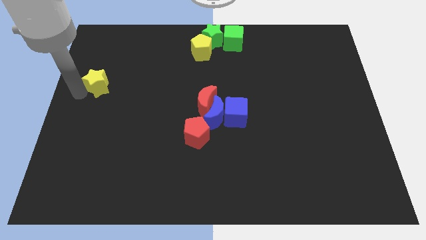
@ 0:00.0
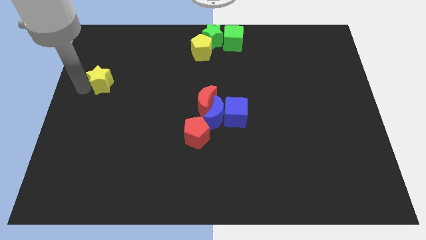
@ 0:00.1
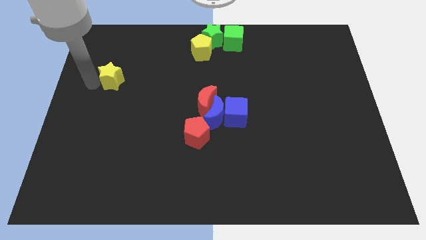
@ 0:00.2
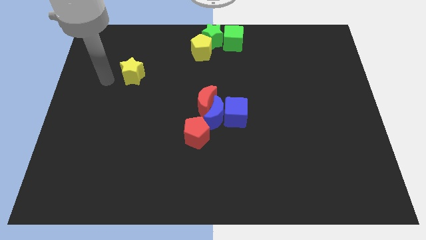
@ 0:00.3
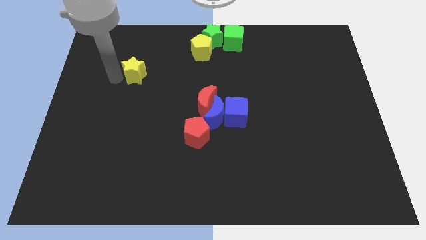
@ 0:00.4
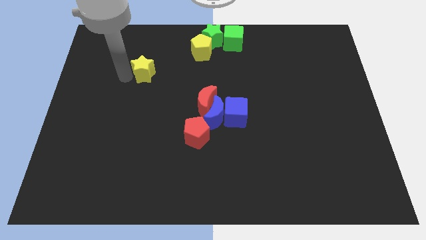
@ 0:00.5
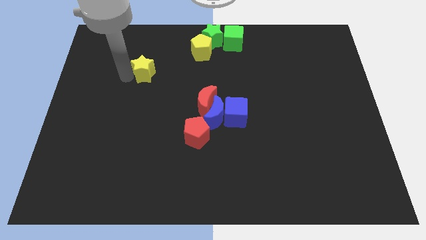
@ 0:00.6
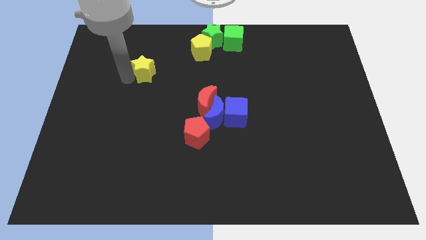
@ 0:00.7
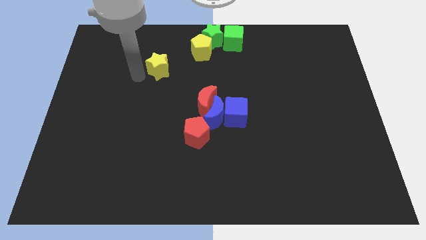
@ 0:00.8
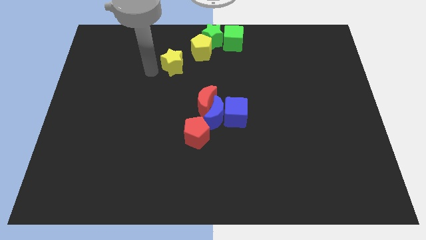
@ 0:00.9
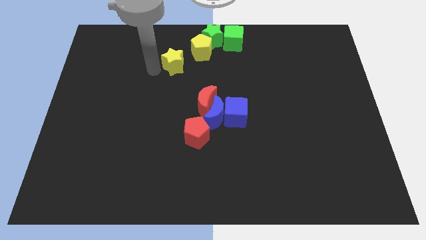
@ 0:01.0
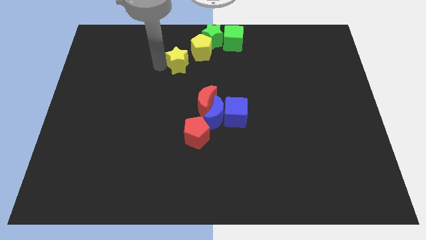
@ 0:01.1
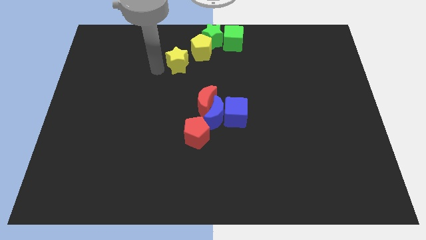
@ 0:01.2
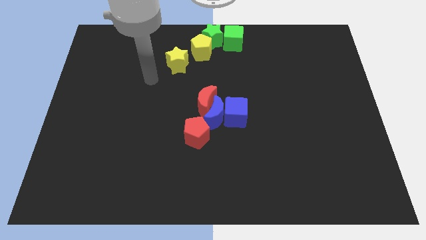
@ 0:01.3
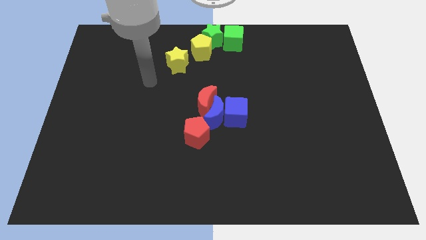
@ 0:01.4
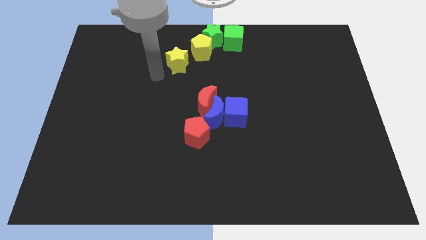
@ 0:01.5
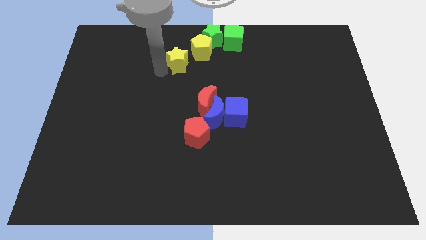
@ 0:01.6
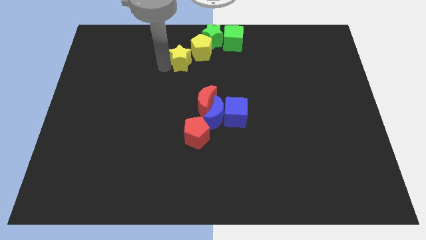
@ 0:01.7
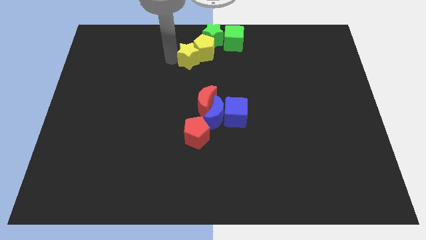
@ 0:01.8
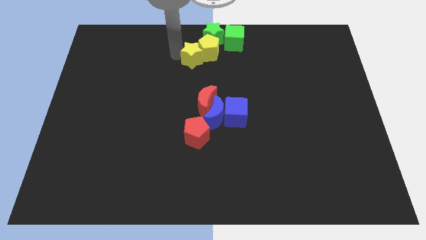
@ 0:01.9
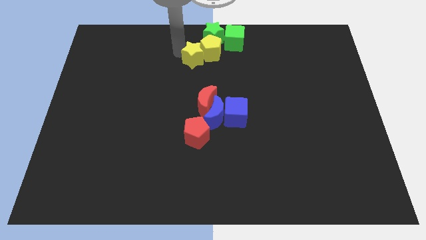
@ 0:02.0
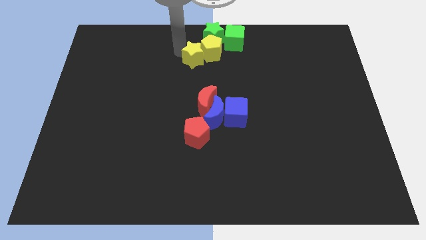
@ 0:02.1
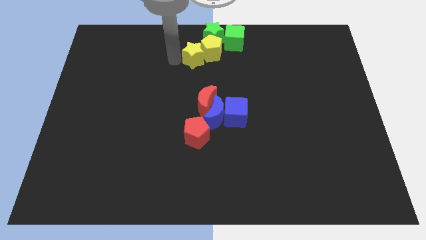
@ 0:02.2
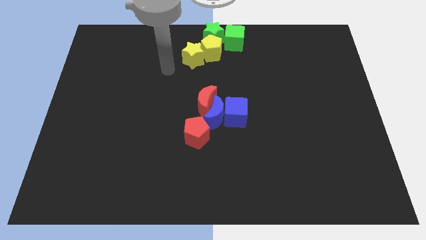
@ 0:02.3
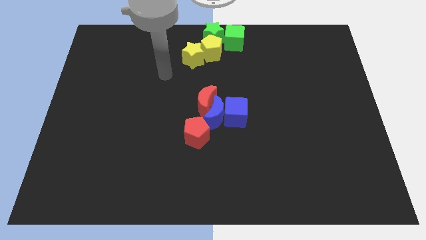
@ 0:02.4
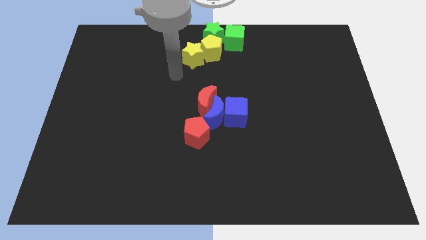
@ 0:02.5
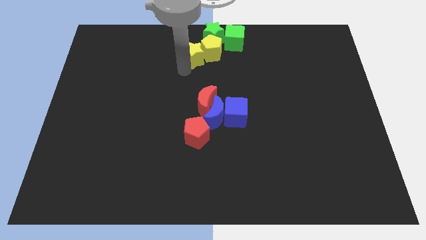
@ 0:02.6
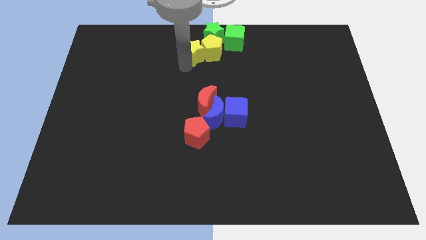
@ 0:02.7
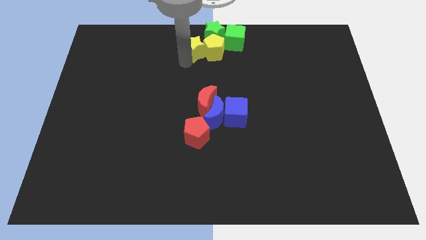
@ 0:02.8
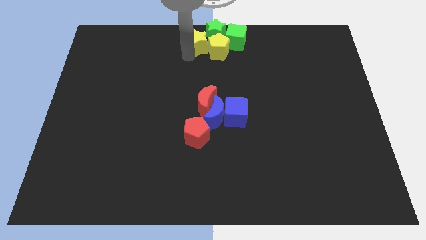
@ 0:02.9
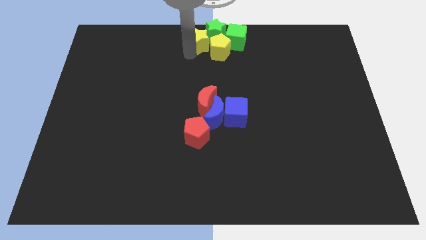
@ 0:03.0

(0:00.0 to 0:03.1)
move yellow star into group of green and yellow block

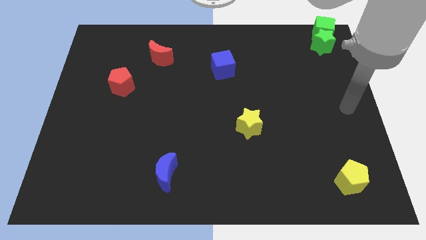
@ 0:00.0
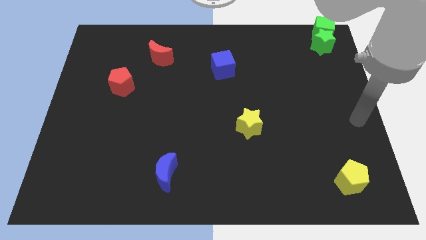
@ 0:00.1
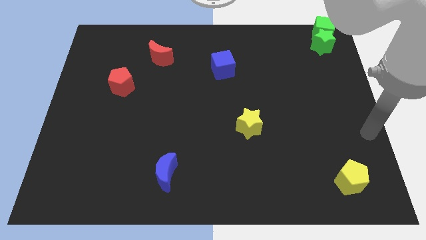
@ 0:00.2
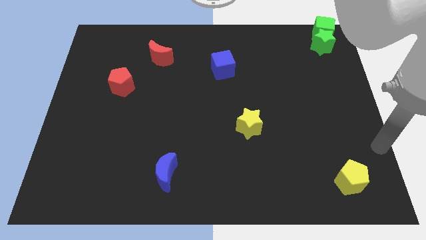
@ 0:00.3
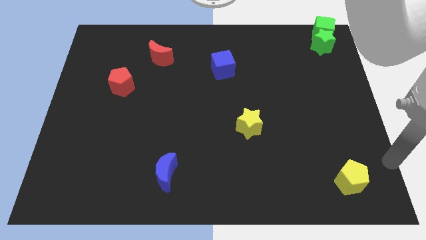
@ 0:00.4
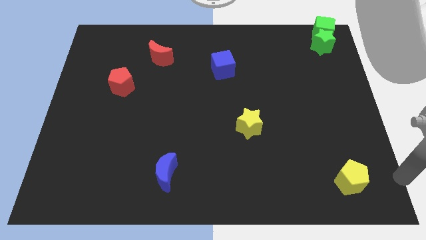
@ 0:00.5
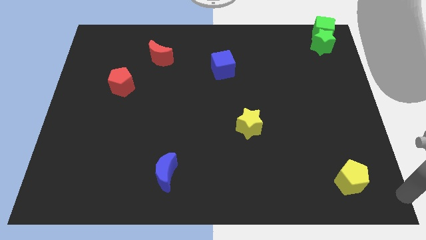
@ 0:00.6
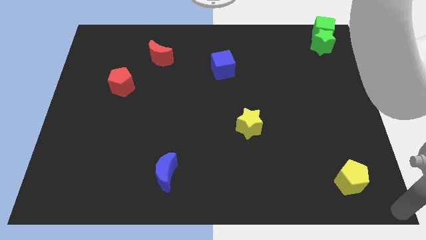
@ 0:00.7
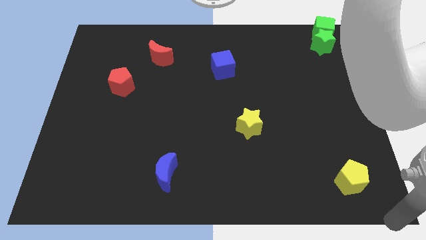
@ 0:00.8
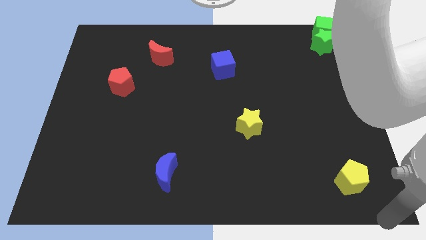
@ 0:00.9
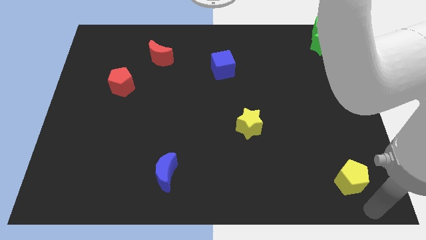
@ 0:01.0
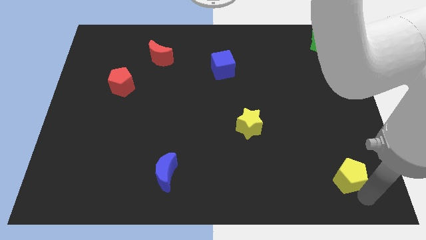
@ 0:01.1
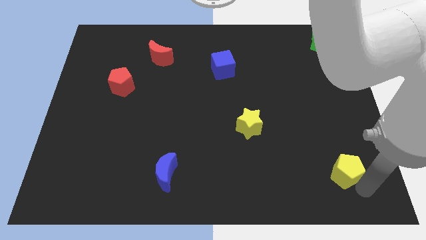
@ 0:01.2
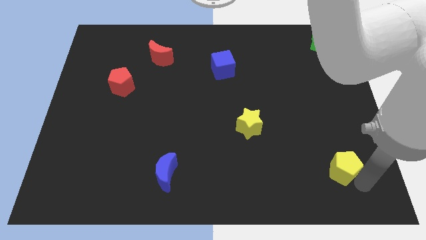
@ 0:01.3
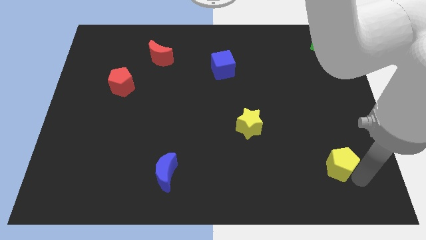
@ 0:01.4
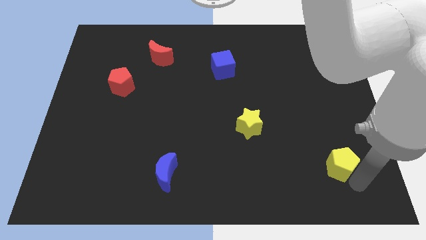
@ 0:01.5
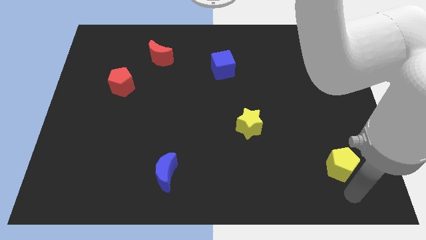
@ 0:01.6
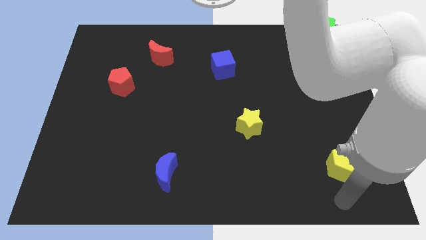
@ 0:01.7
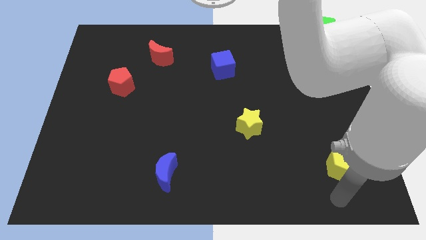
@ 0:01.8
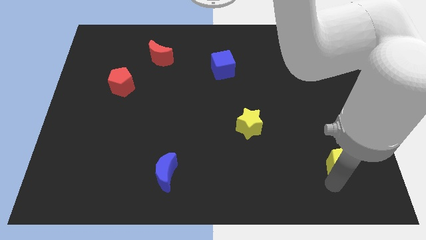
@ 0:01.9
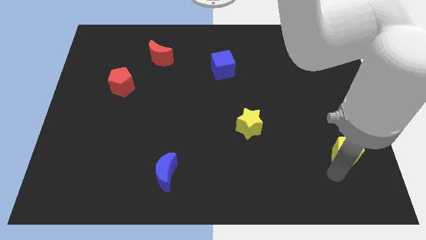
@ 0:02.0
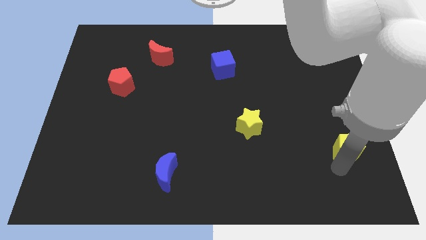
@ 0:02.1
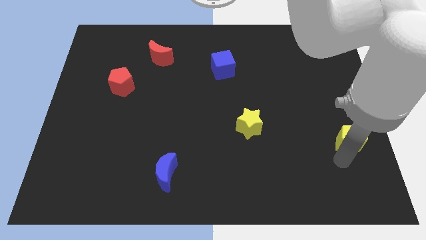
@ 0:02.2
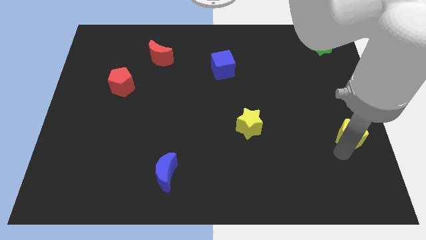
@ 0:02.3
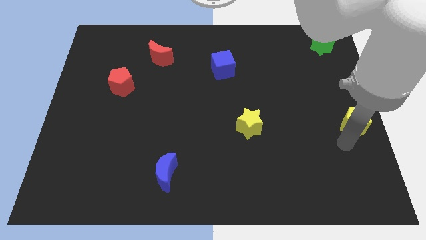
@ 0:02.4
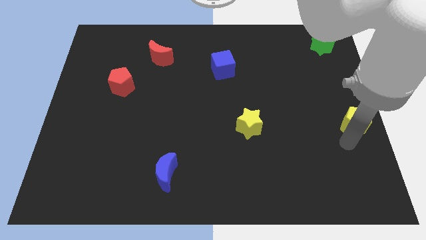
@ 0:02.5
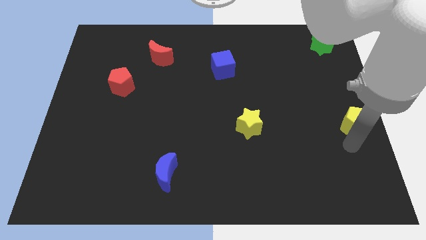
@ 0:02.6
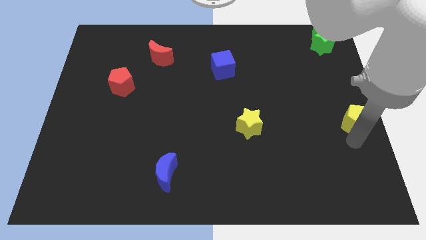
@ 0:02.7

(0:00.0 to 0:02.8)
move the yellow pentagon to the right center of the board

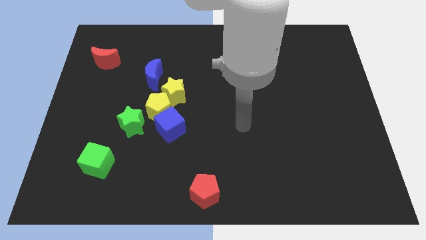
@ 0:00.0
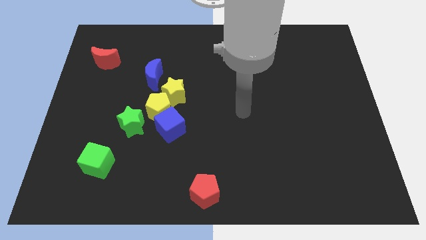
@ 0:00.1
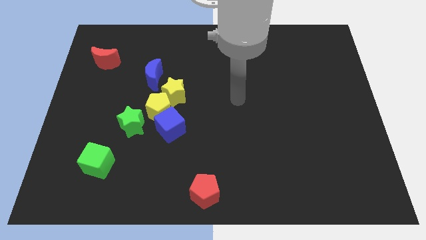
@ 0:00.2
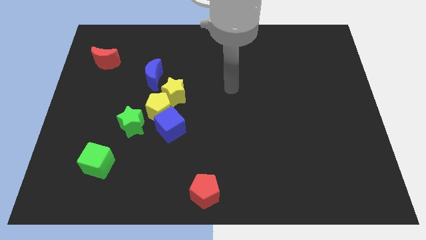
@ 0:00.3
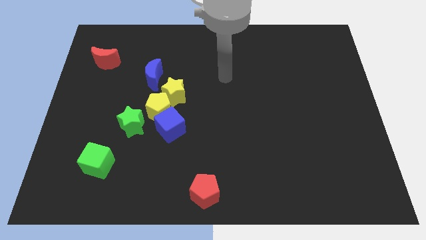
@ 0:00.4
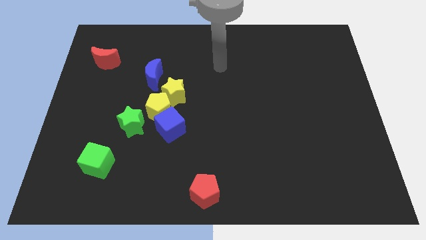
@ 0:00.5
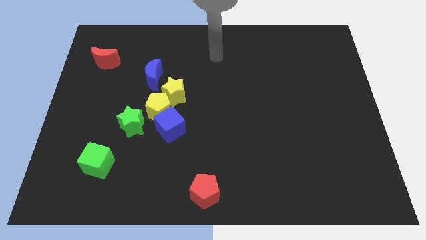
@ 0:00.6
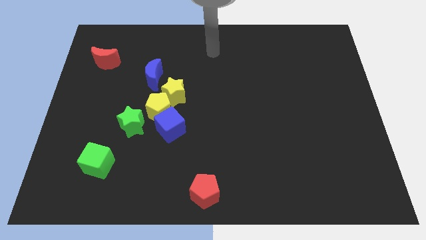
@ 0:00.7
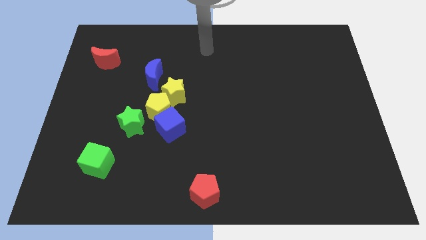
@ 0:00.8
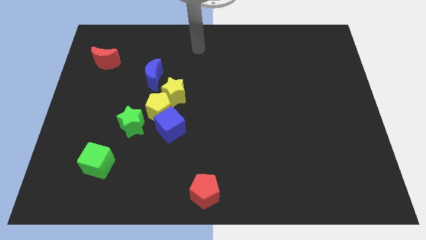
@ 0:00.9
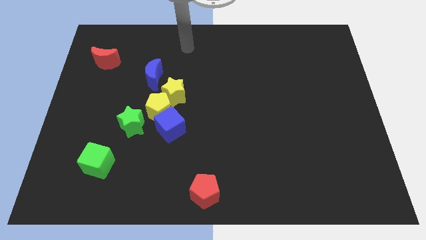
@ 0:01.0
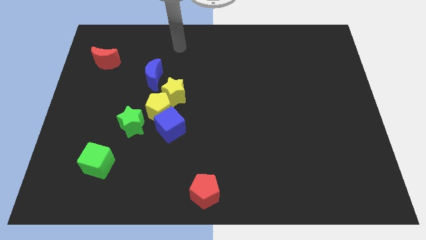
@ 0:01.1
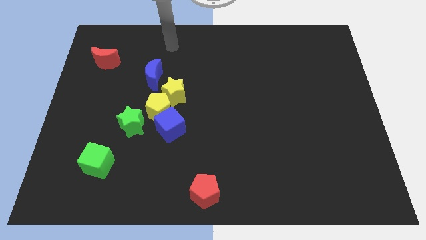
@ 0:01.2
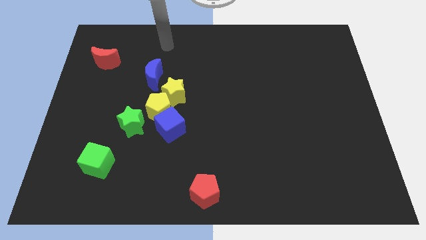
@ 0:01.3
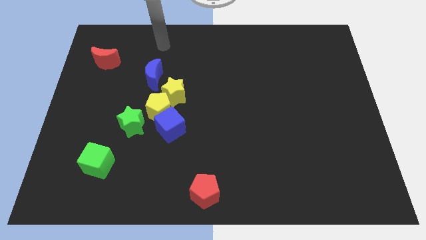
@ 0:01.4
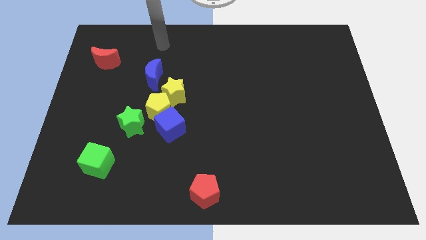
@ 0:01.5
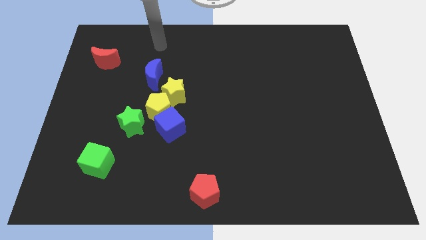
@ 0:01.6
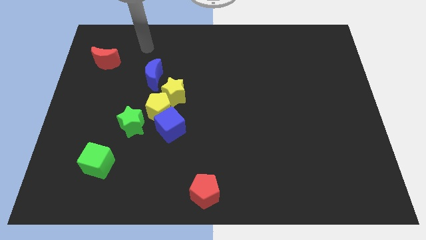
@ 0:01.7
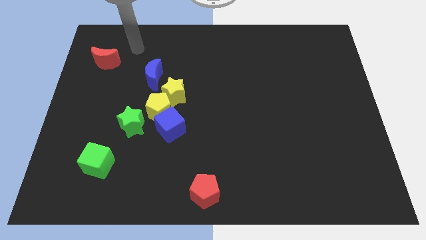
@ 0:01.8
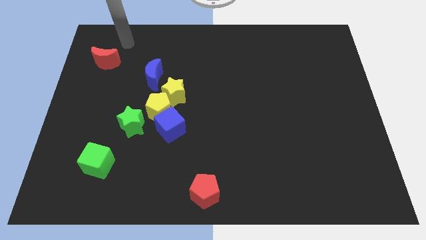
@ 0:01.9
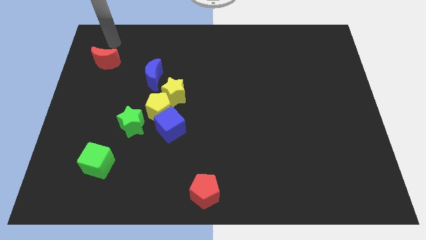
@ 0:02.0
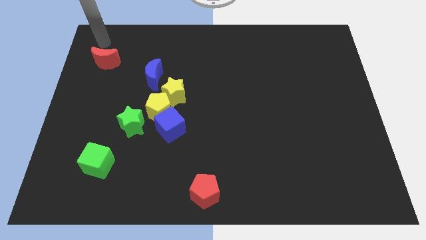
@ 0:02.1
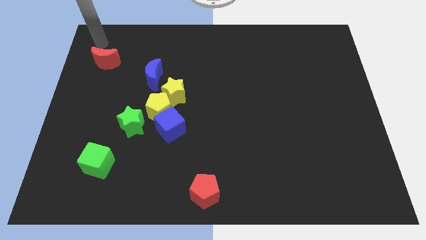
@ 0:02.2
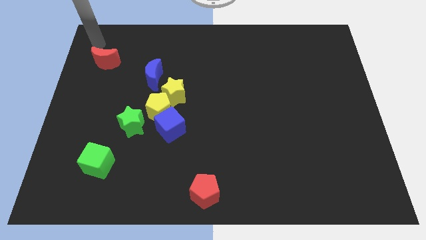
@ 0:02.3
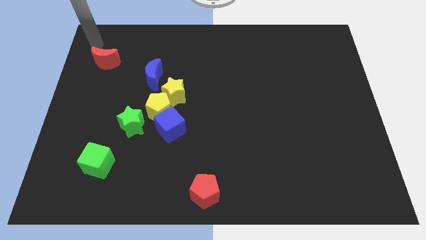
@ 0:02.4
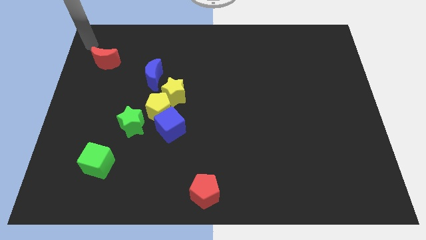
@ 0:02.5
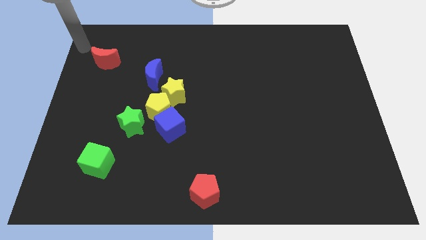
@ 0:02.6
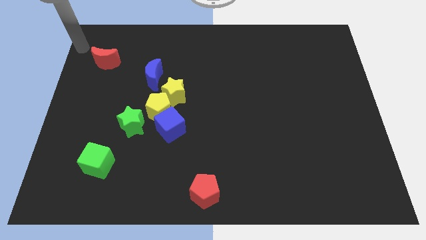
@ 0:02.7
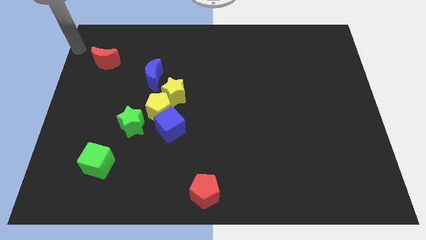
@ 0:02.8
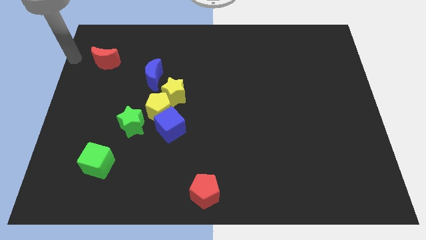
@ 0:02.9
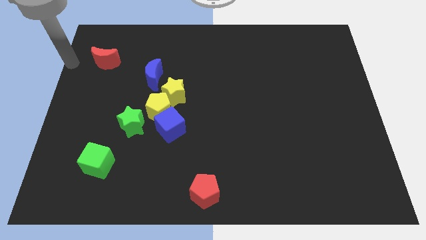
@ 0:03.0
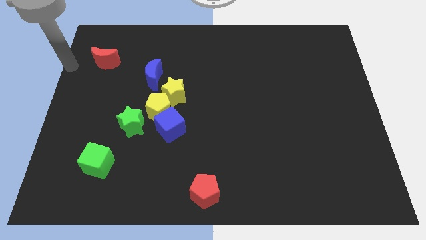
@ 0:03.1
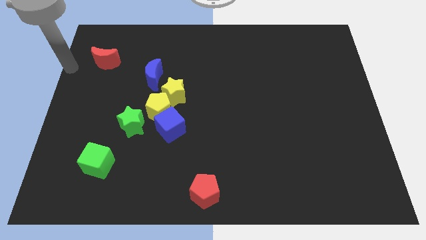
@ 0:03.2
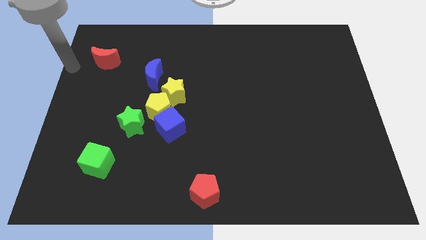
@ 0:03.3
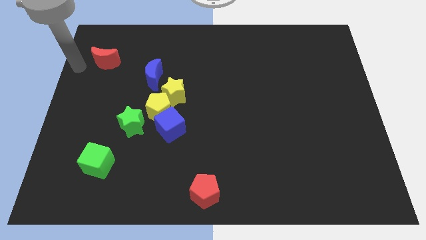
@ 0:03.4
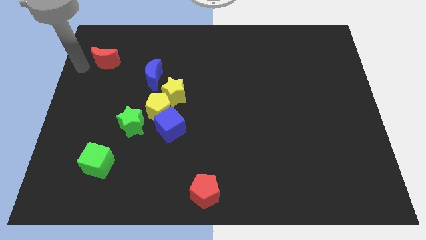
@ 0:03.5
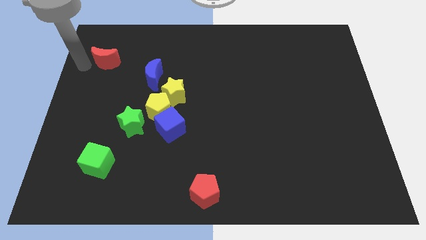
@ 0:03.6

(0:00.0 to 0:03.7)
move your arm towards the red crescent
